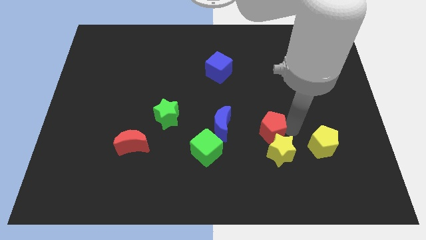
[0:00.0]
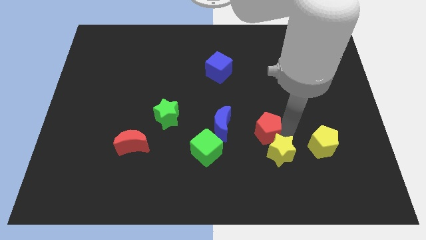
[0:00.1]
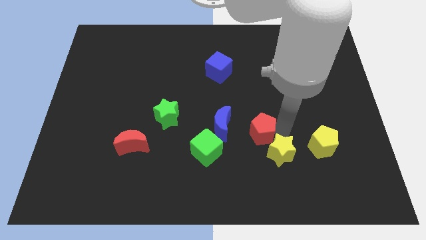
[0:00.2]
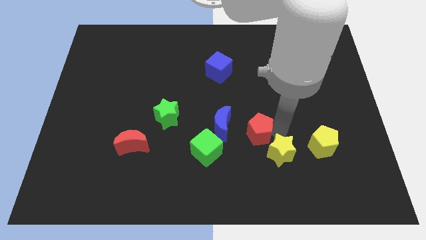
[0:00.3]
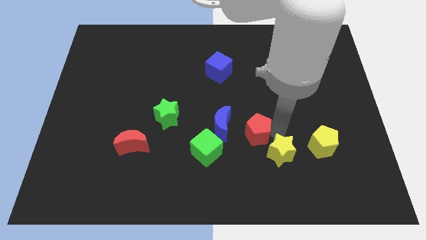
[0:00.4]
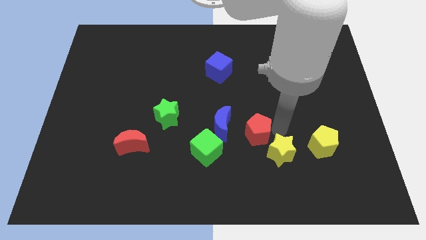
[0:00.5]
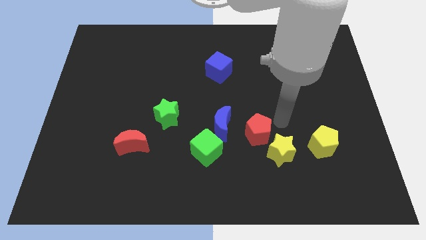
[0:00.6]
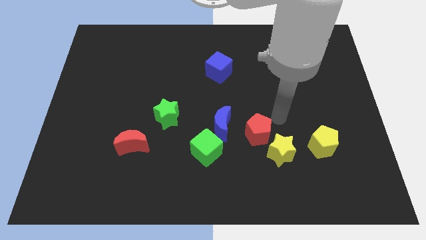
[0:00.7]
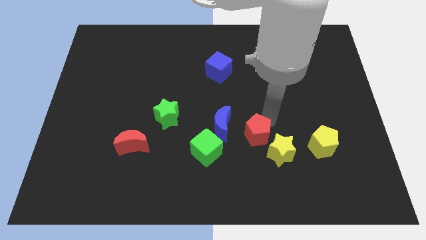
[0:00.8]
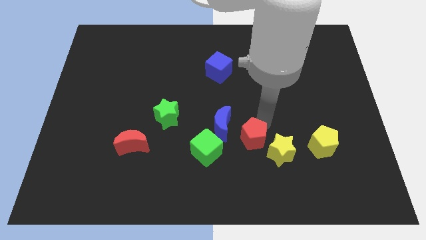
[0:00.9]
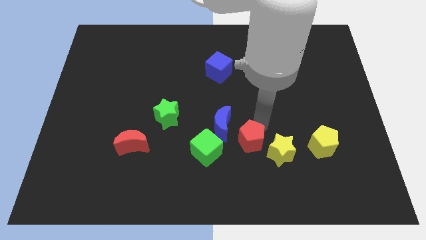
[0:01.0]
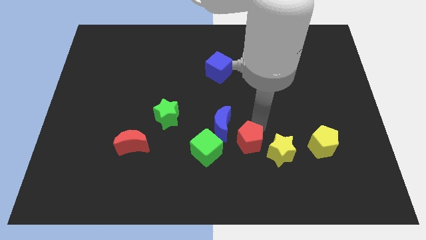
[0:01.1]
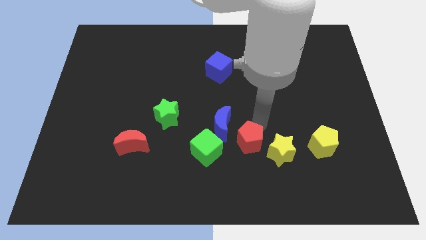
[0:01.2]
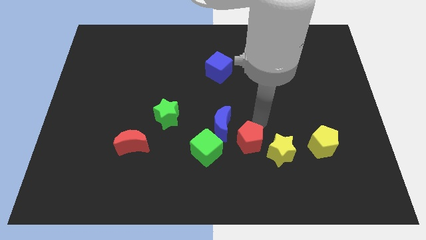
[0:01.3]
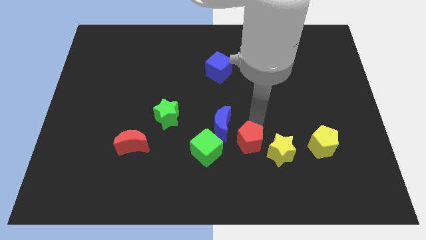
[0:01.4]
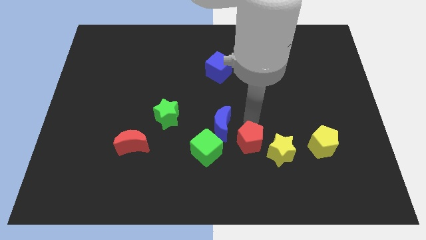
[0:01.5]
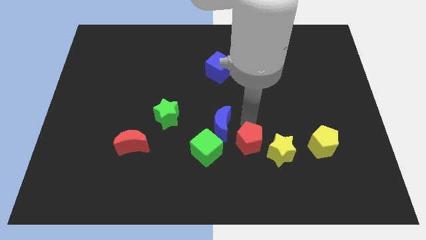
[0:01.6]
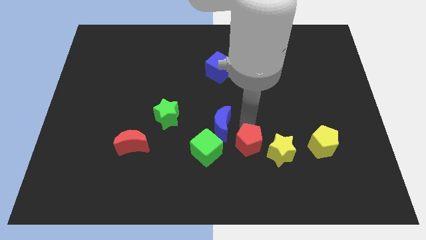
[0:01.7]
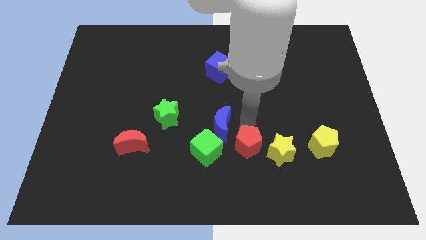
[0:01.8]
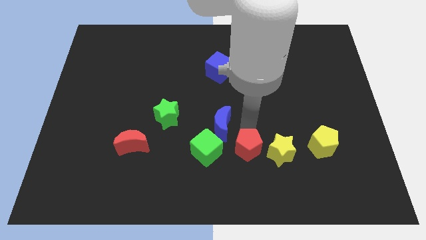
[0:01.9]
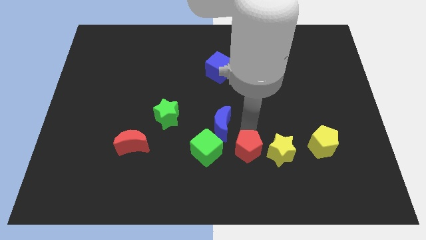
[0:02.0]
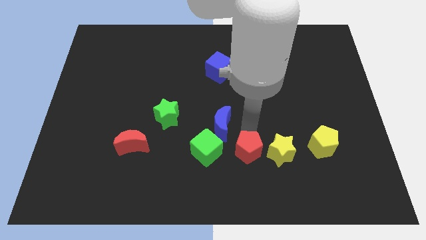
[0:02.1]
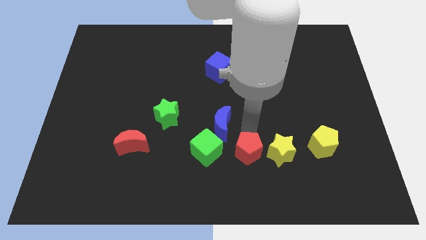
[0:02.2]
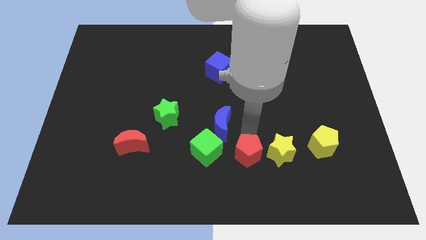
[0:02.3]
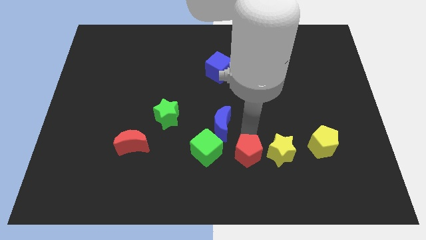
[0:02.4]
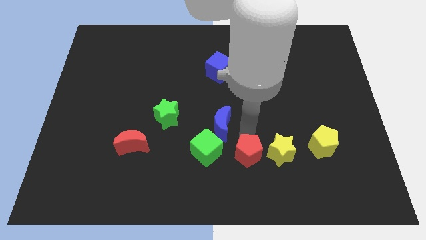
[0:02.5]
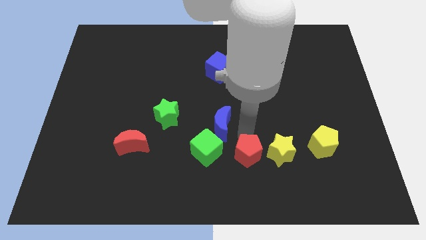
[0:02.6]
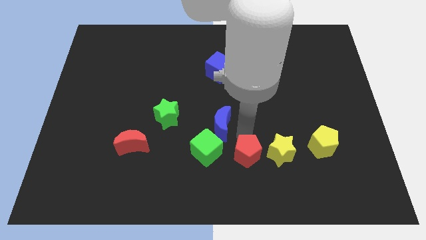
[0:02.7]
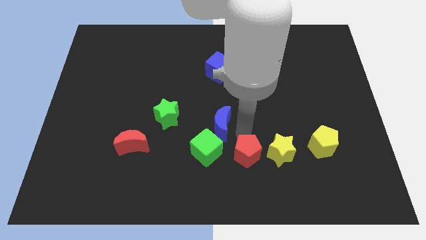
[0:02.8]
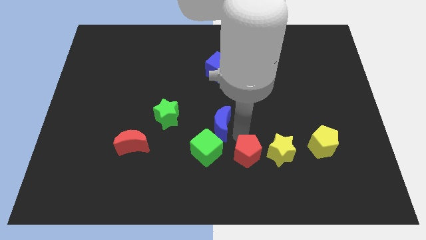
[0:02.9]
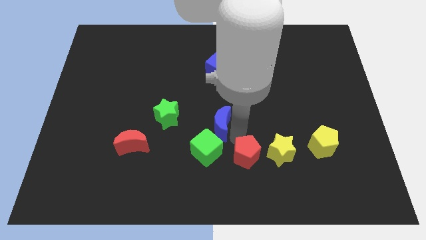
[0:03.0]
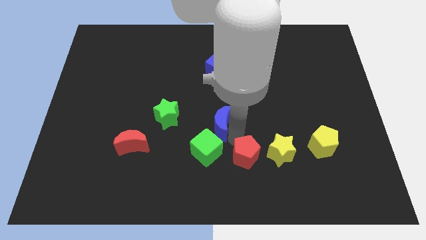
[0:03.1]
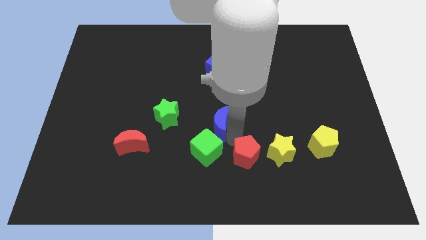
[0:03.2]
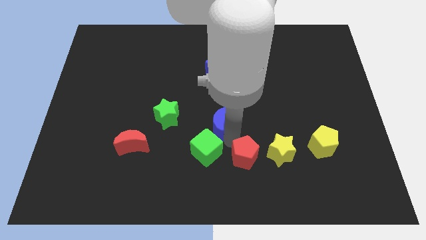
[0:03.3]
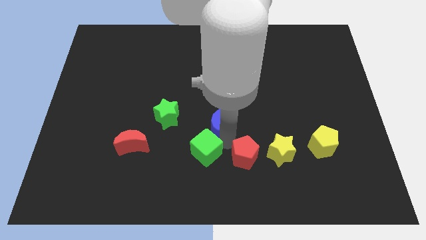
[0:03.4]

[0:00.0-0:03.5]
place the red pentagon between the green square and yellow star

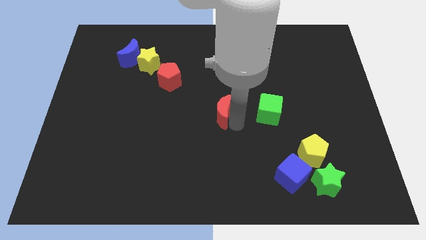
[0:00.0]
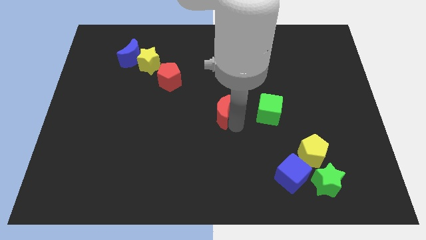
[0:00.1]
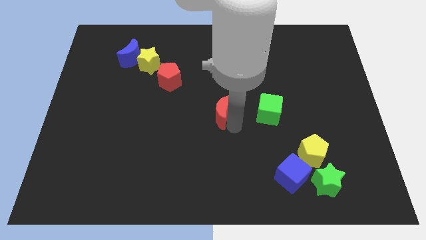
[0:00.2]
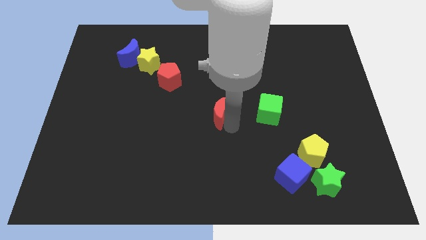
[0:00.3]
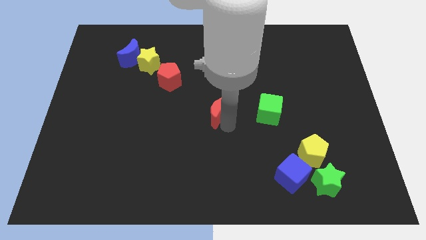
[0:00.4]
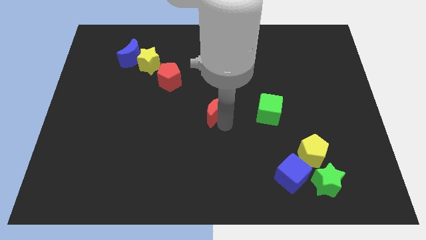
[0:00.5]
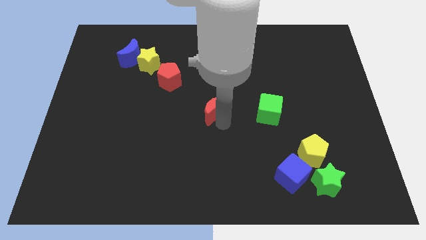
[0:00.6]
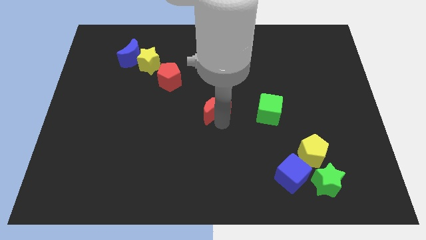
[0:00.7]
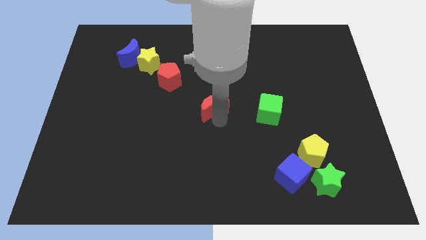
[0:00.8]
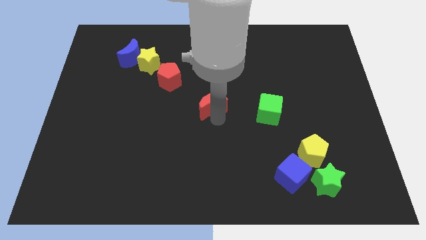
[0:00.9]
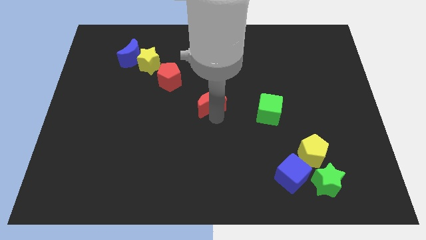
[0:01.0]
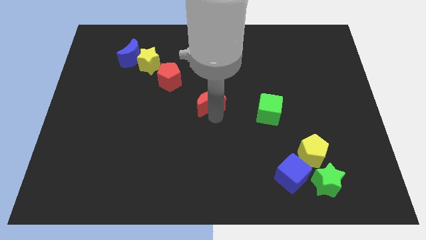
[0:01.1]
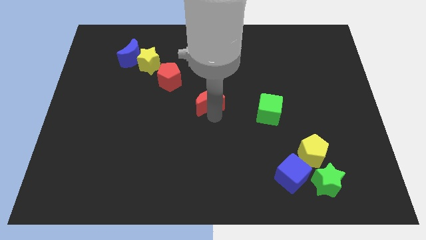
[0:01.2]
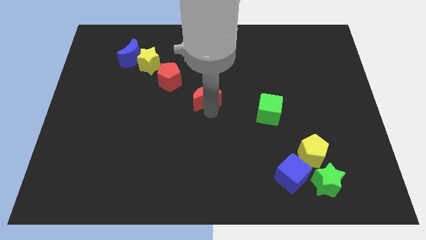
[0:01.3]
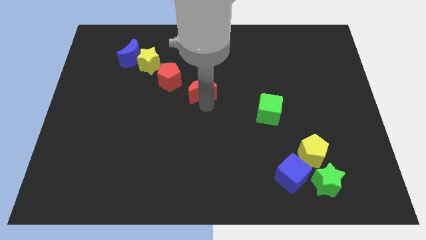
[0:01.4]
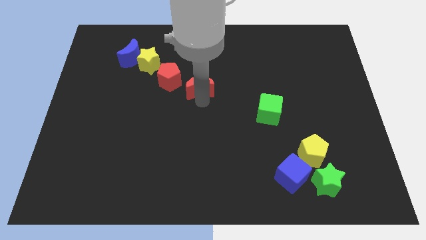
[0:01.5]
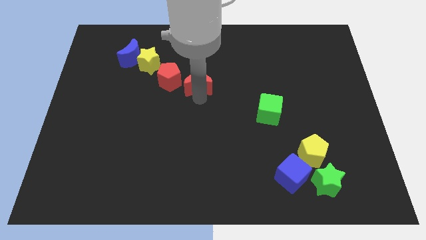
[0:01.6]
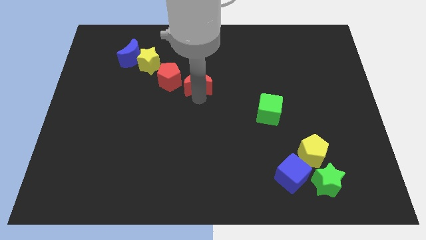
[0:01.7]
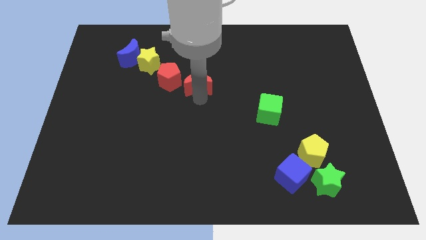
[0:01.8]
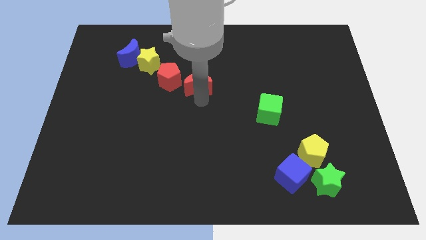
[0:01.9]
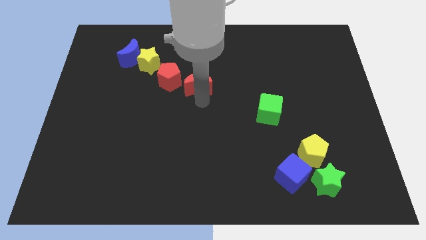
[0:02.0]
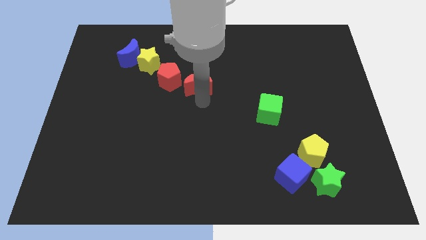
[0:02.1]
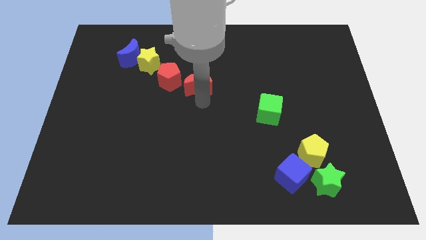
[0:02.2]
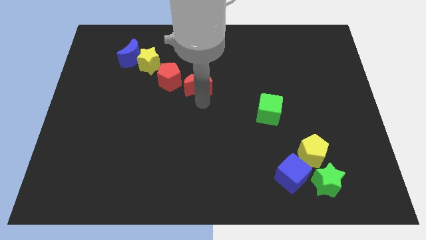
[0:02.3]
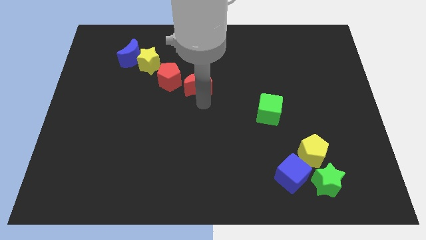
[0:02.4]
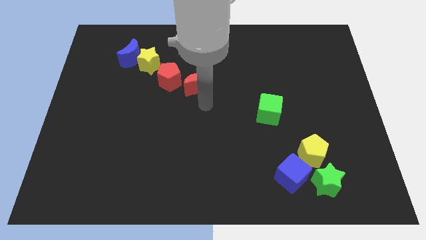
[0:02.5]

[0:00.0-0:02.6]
push the red crescent to the bottom right of the red pentagon

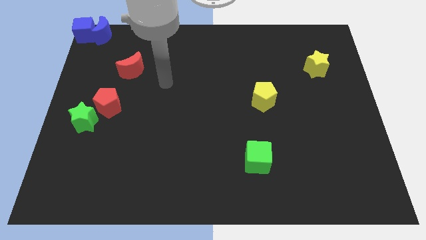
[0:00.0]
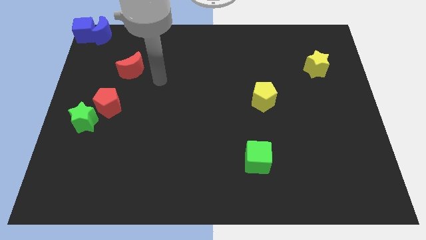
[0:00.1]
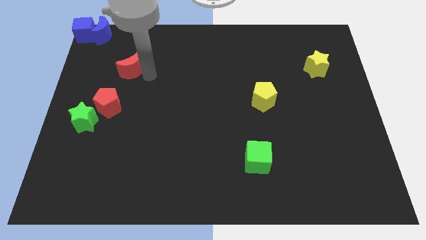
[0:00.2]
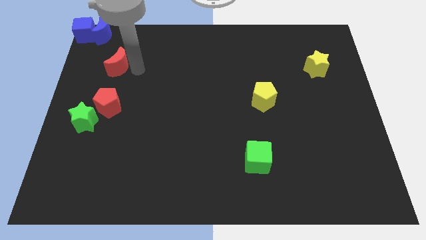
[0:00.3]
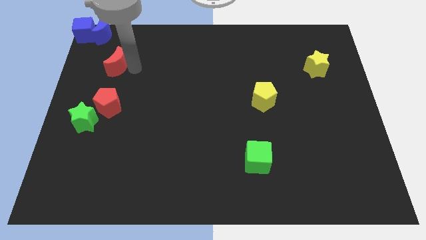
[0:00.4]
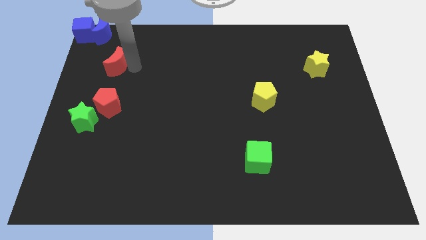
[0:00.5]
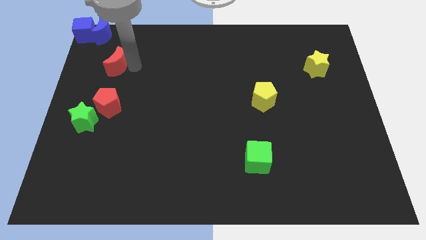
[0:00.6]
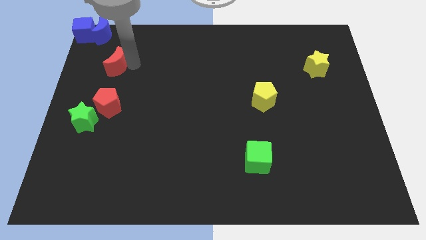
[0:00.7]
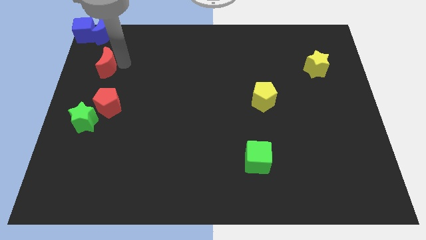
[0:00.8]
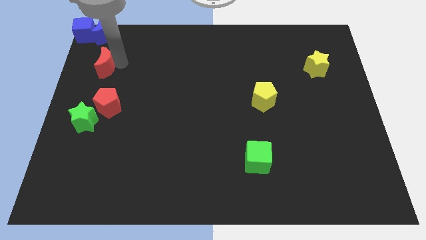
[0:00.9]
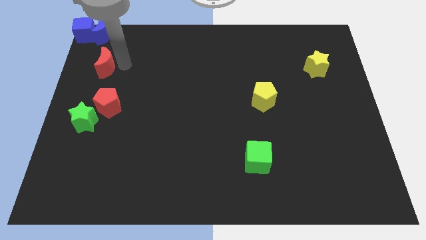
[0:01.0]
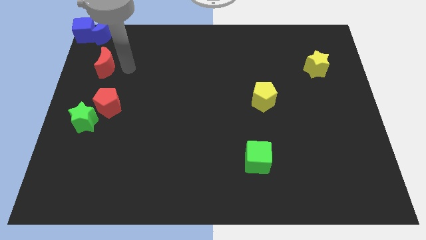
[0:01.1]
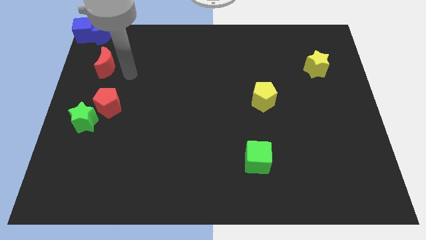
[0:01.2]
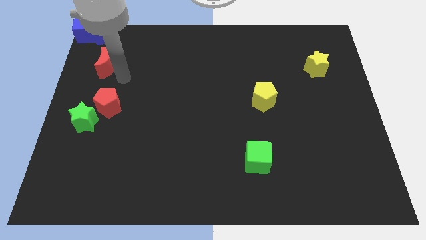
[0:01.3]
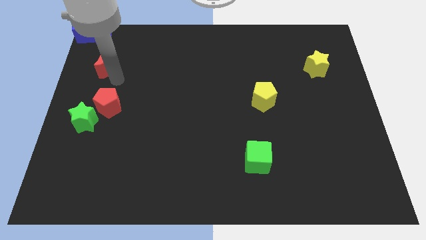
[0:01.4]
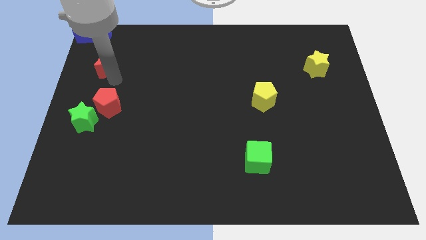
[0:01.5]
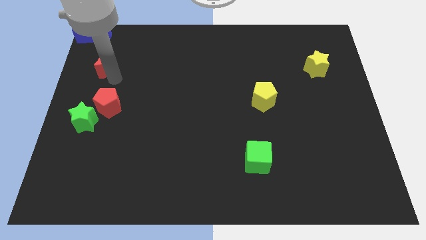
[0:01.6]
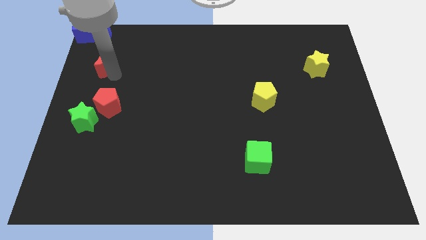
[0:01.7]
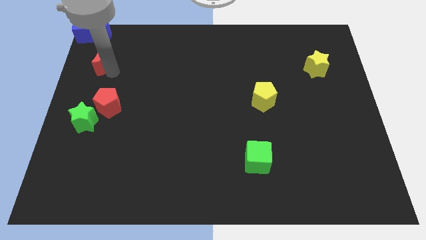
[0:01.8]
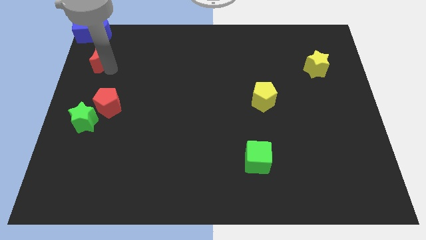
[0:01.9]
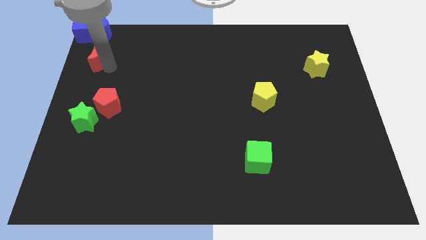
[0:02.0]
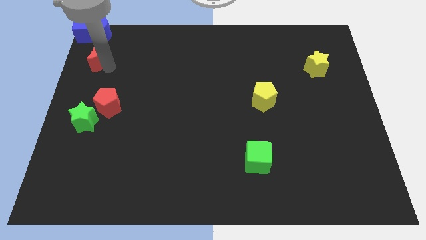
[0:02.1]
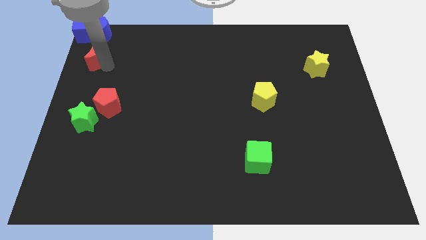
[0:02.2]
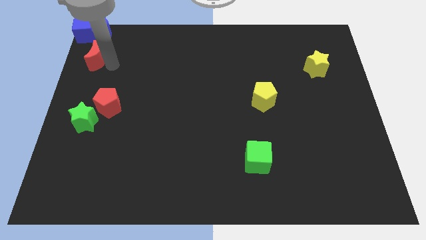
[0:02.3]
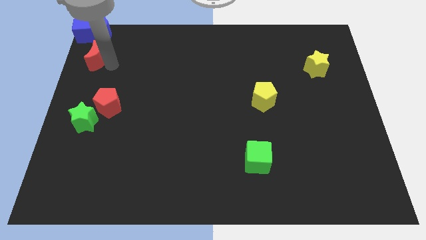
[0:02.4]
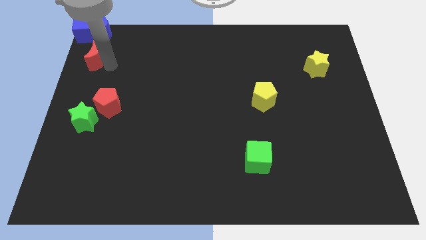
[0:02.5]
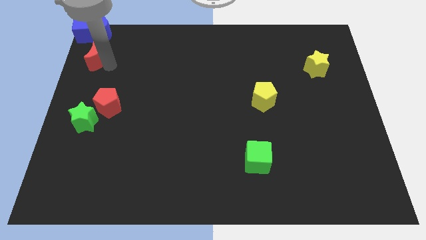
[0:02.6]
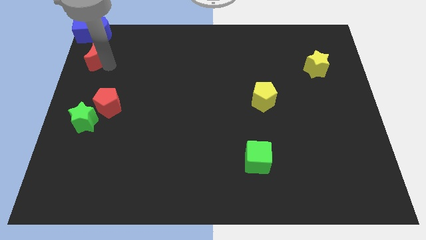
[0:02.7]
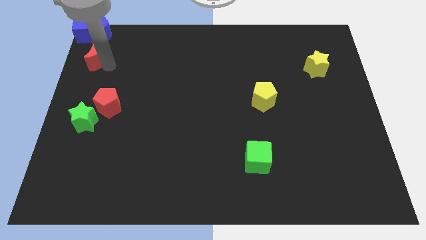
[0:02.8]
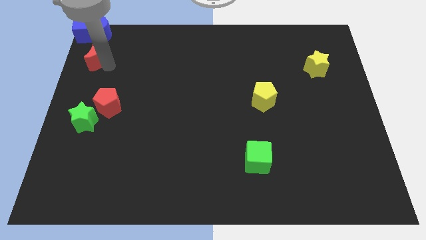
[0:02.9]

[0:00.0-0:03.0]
push the red crescent into the blue blocks
